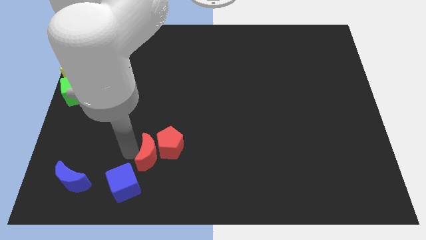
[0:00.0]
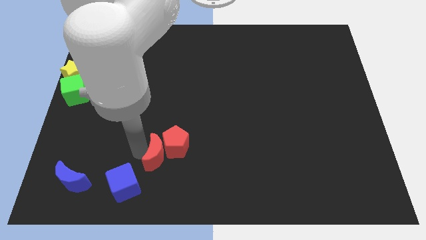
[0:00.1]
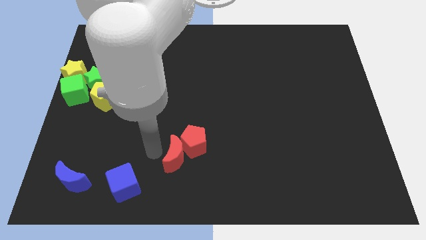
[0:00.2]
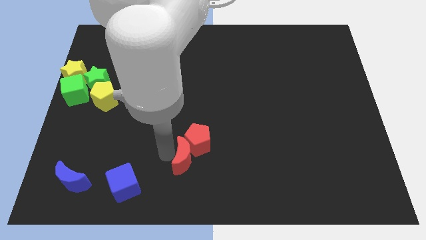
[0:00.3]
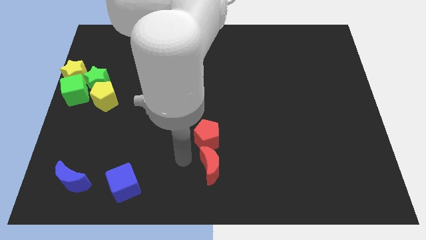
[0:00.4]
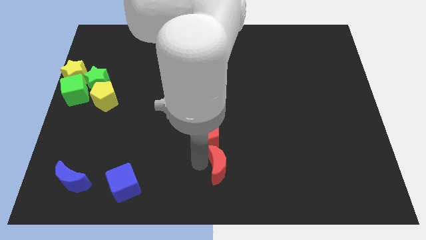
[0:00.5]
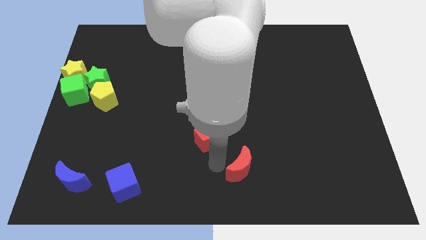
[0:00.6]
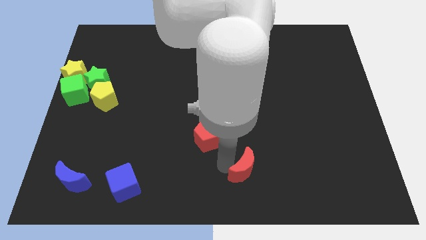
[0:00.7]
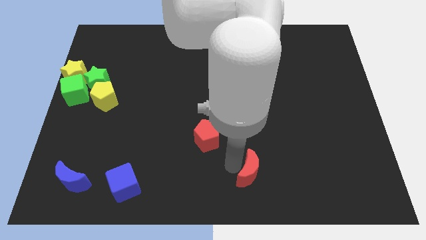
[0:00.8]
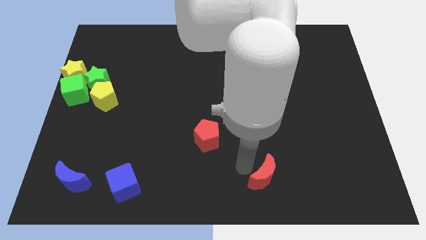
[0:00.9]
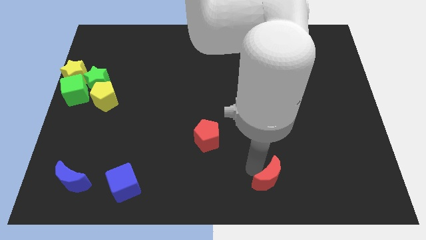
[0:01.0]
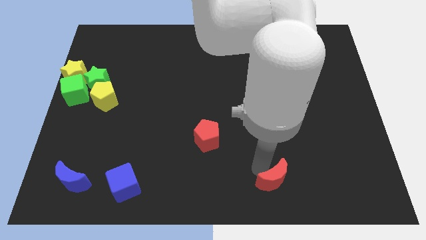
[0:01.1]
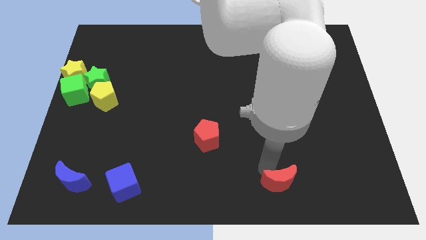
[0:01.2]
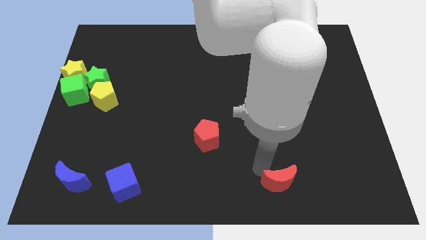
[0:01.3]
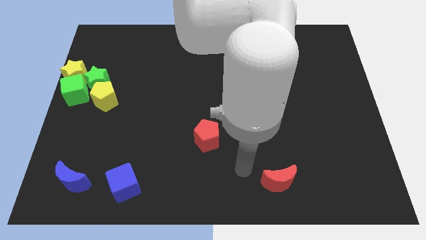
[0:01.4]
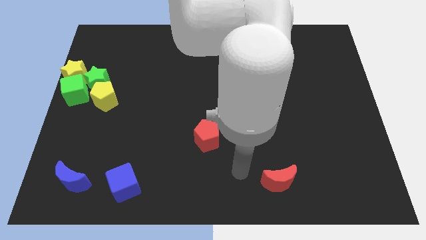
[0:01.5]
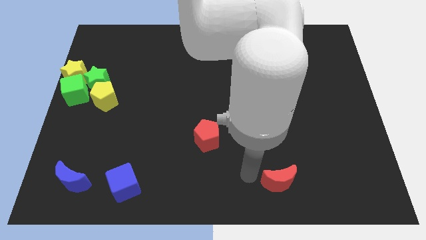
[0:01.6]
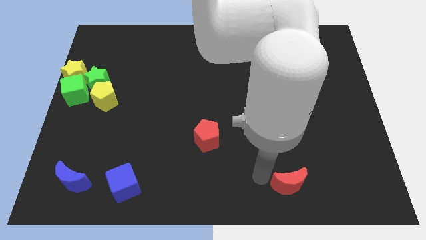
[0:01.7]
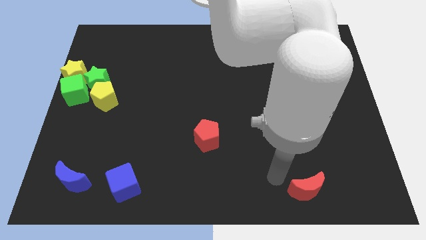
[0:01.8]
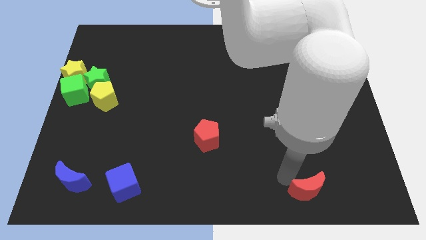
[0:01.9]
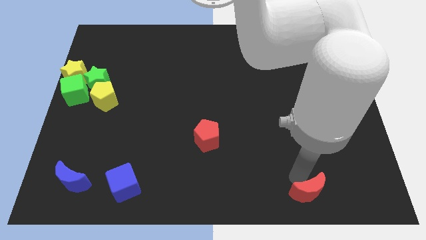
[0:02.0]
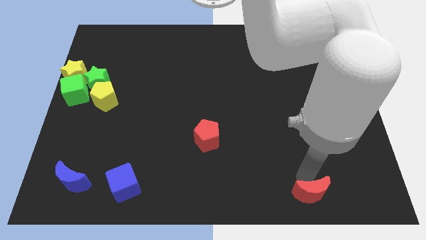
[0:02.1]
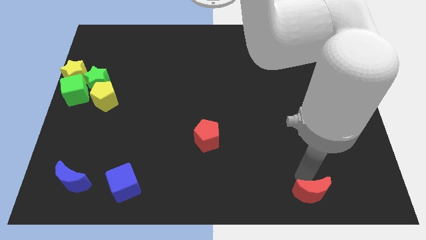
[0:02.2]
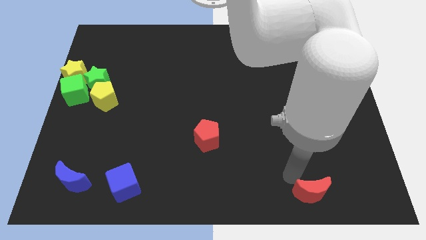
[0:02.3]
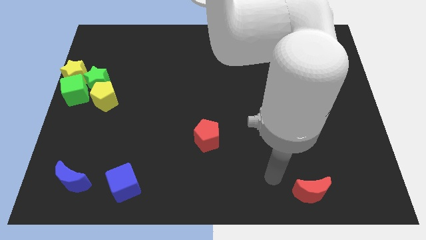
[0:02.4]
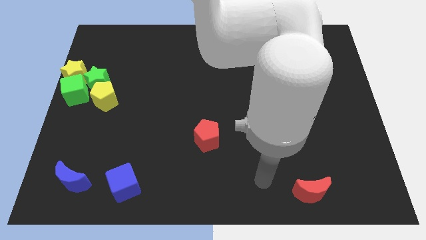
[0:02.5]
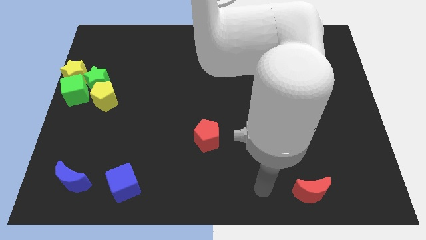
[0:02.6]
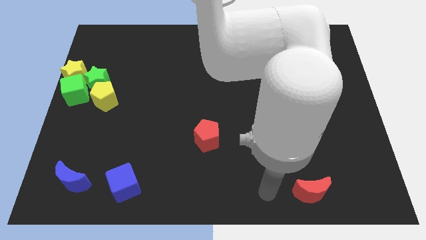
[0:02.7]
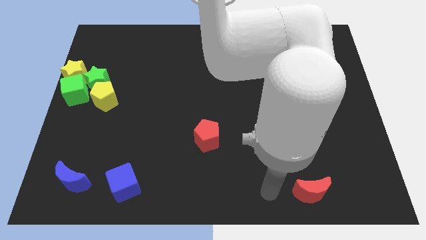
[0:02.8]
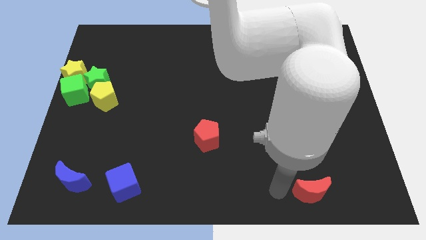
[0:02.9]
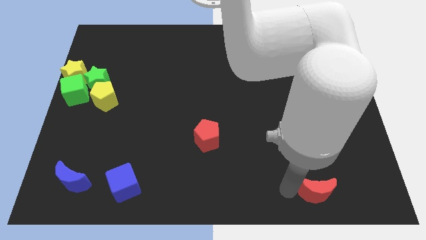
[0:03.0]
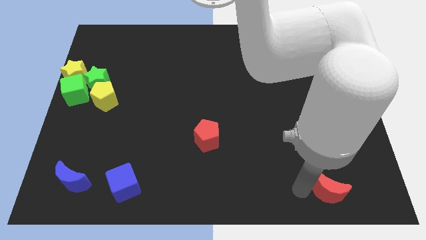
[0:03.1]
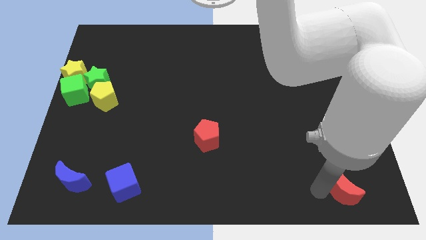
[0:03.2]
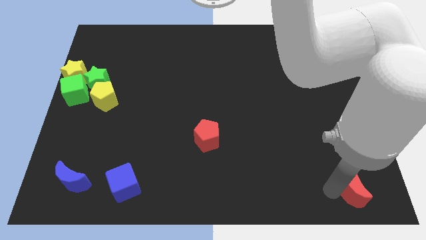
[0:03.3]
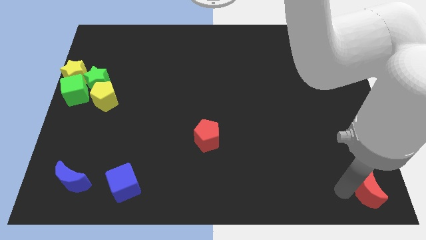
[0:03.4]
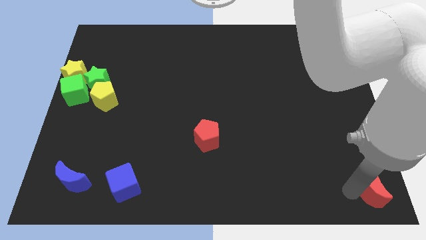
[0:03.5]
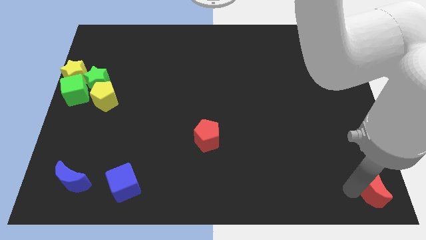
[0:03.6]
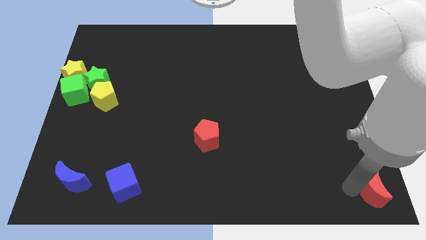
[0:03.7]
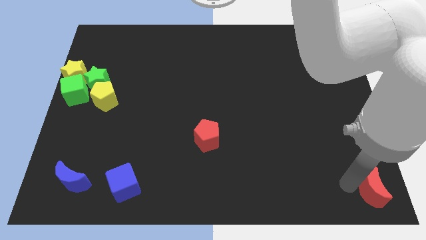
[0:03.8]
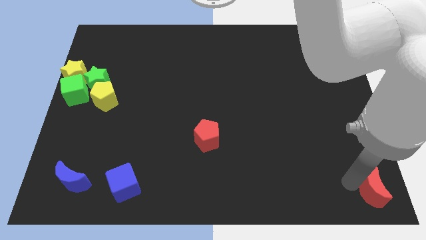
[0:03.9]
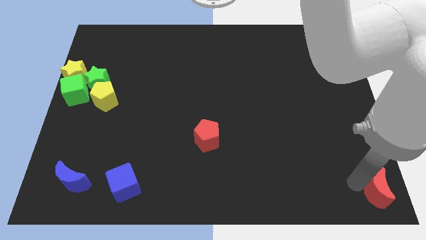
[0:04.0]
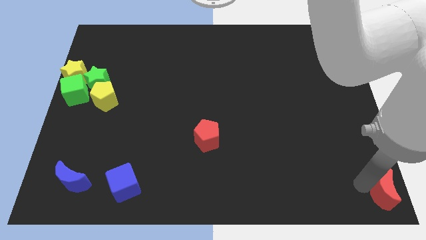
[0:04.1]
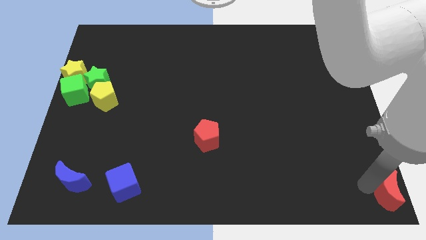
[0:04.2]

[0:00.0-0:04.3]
place the red crescent at bottom right corner of the board

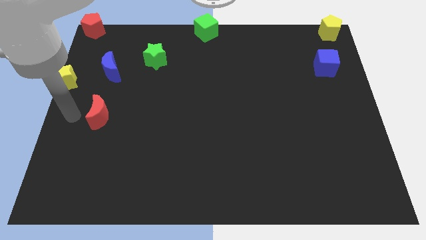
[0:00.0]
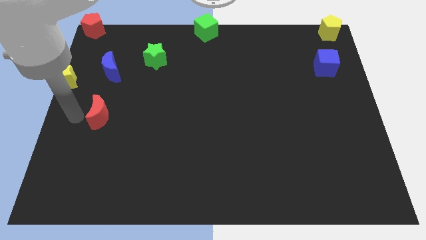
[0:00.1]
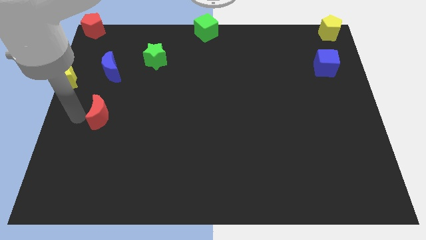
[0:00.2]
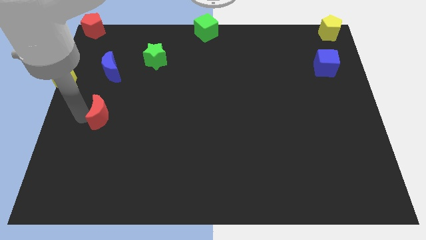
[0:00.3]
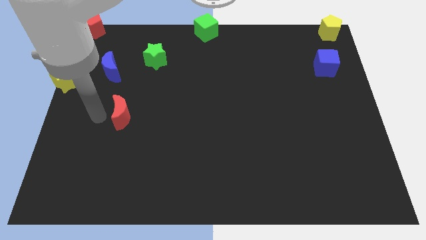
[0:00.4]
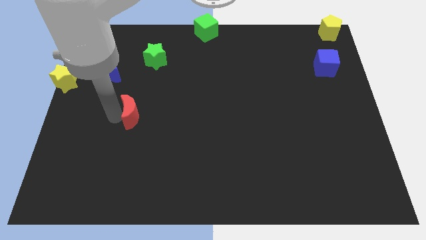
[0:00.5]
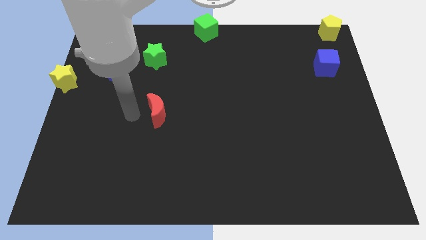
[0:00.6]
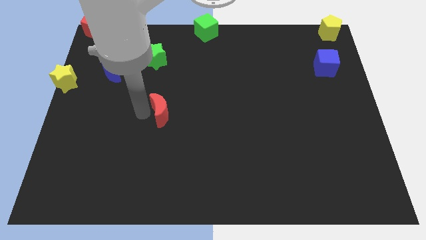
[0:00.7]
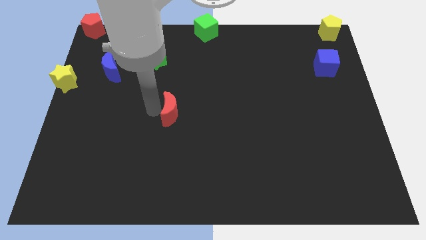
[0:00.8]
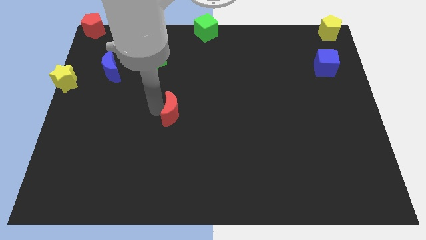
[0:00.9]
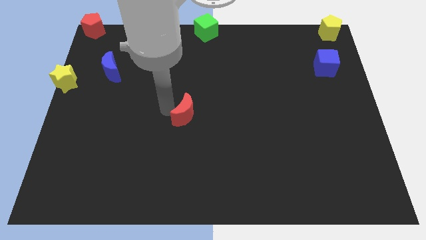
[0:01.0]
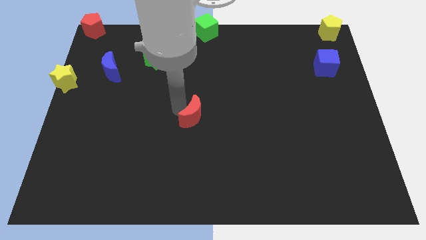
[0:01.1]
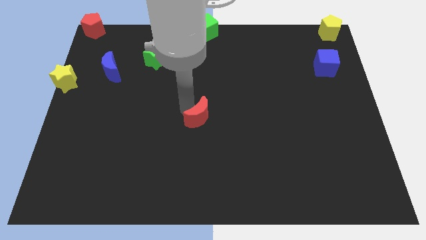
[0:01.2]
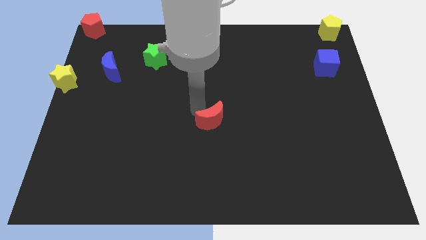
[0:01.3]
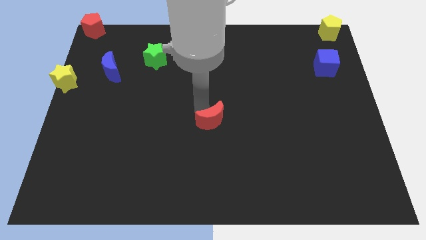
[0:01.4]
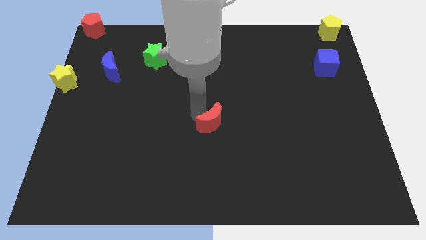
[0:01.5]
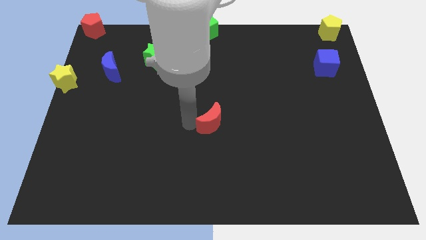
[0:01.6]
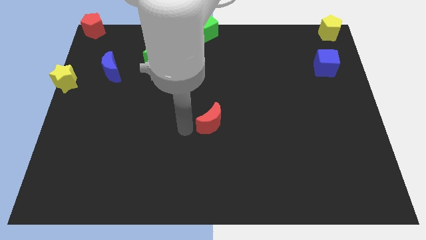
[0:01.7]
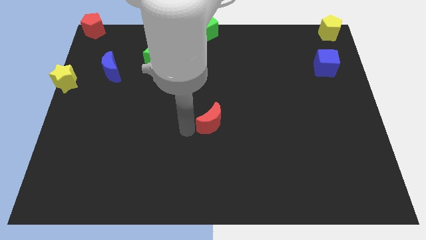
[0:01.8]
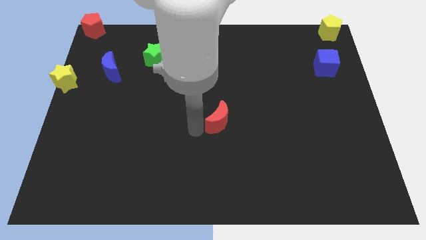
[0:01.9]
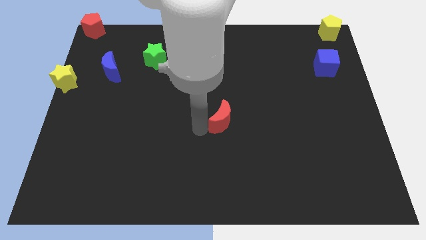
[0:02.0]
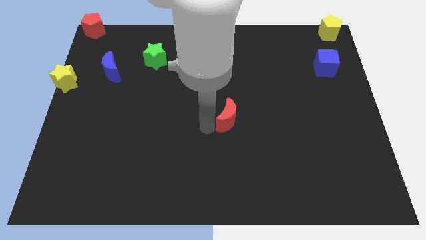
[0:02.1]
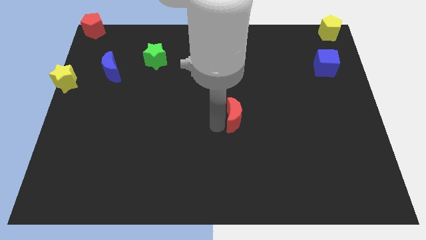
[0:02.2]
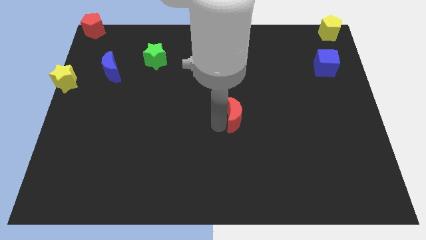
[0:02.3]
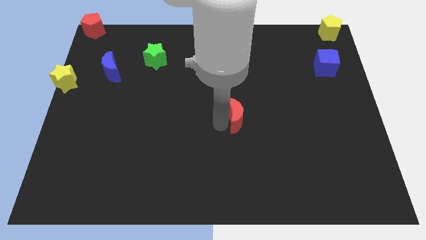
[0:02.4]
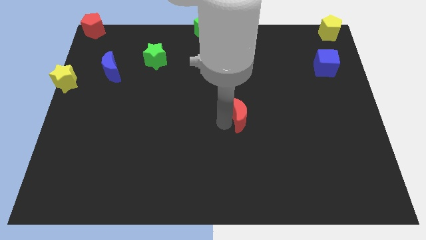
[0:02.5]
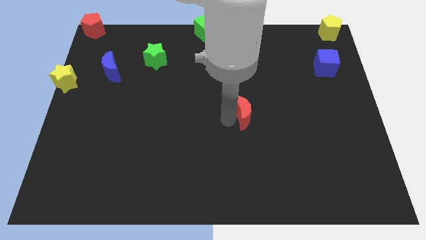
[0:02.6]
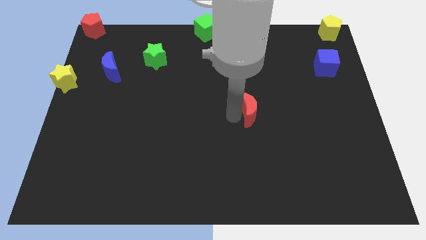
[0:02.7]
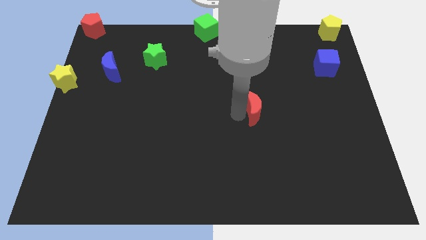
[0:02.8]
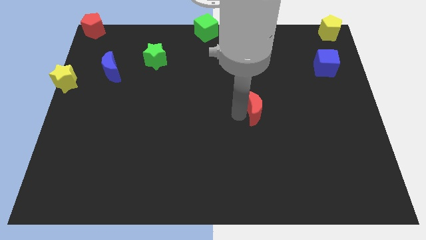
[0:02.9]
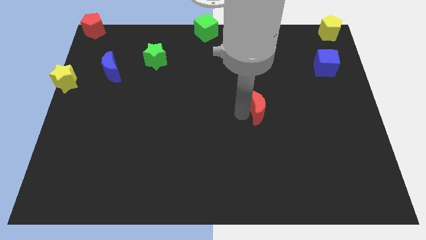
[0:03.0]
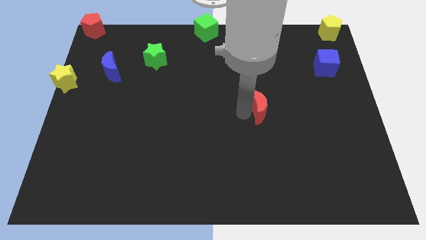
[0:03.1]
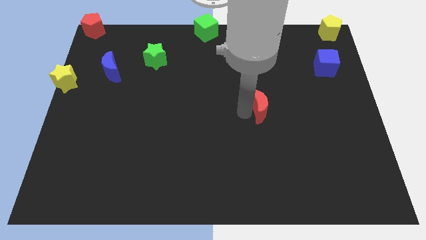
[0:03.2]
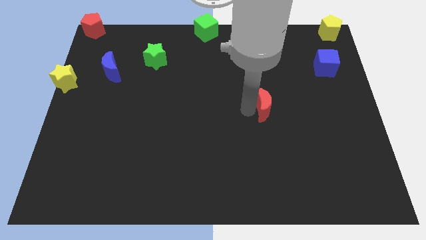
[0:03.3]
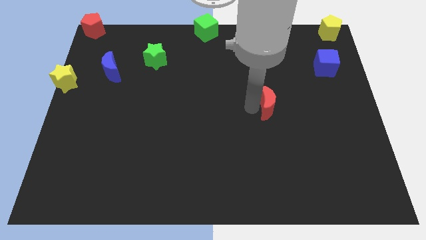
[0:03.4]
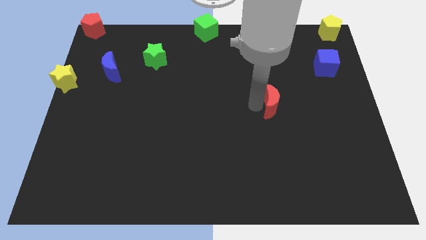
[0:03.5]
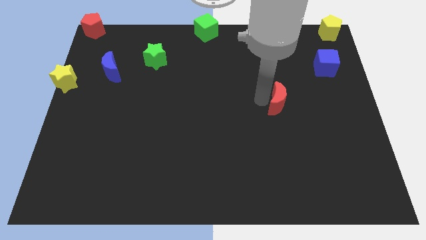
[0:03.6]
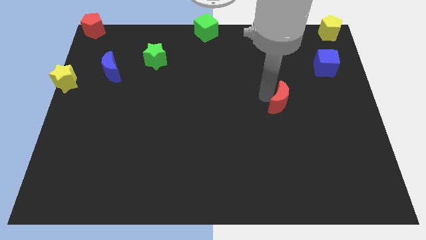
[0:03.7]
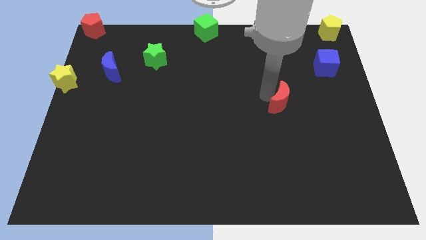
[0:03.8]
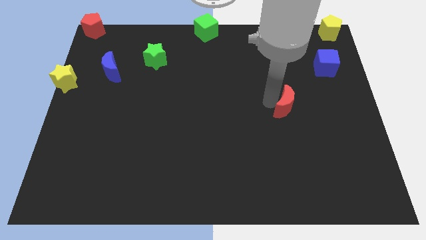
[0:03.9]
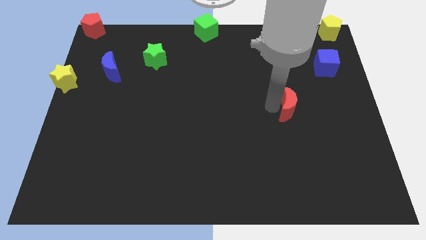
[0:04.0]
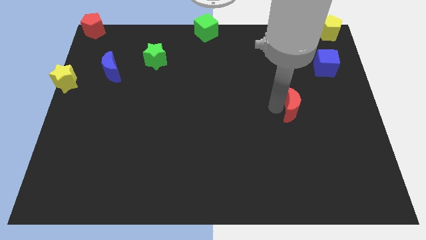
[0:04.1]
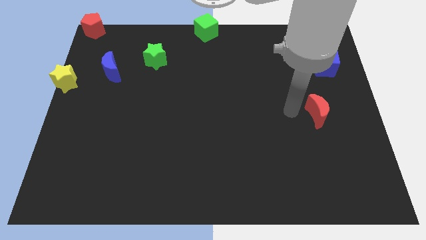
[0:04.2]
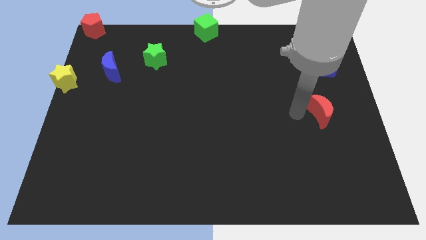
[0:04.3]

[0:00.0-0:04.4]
place the red moon below the blue cube

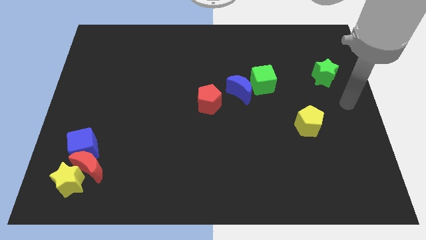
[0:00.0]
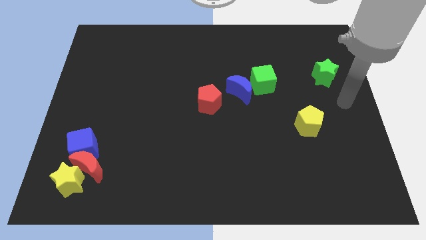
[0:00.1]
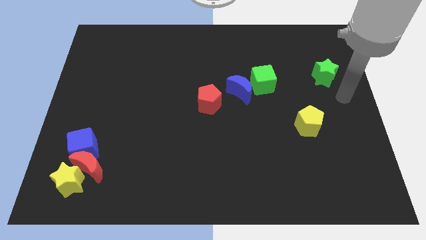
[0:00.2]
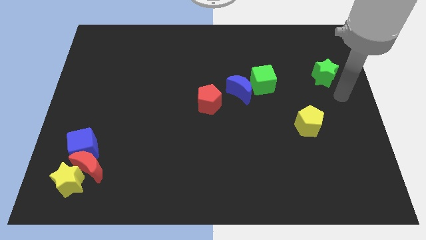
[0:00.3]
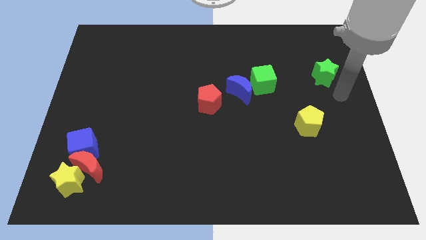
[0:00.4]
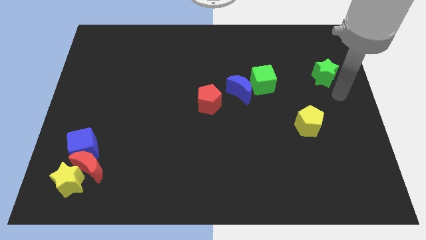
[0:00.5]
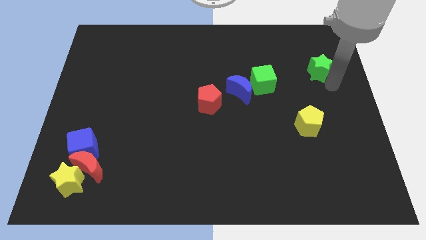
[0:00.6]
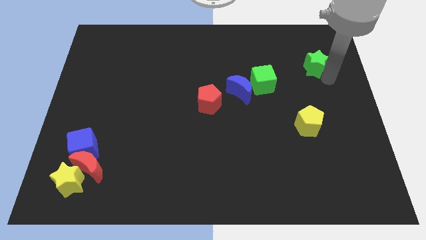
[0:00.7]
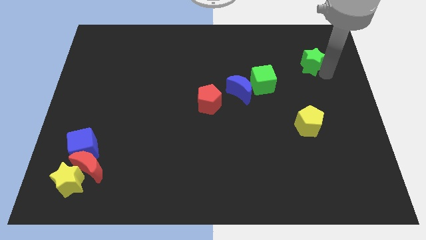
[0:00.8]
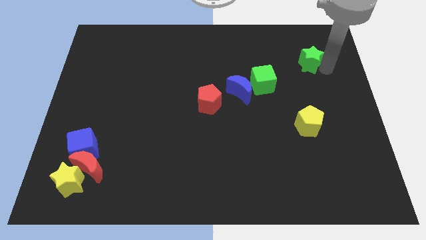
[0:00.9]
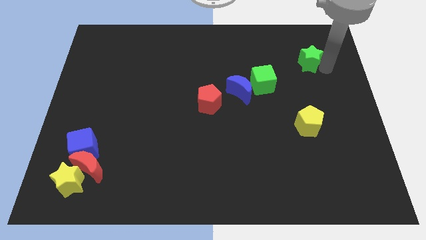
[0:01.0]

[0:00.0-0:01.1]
push the green star to the top of the yellow pentagon
